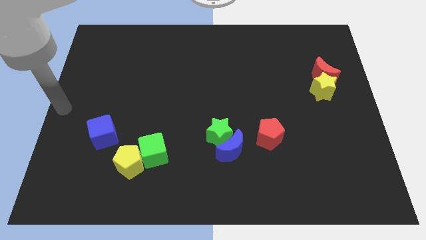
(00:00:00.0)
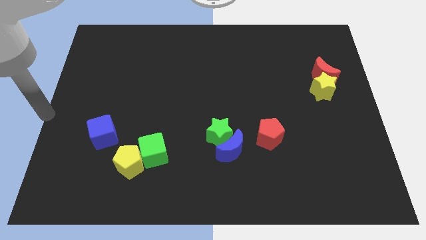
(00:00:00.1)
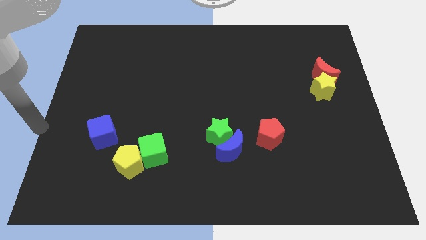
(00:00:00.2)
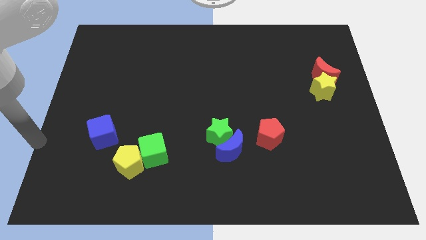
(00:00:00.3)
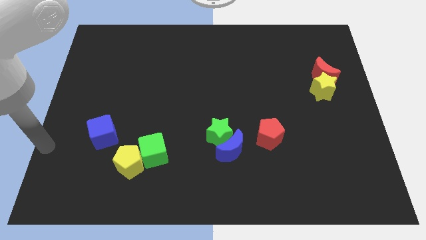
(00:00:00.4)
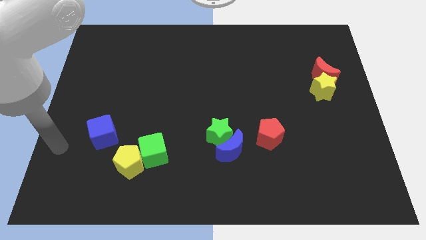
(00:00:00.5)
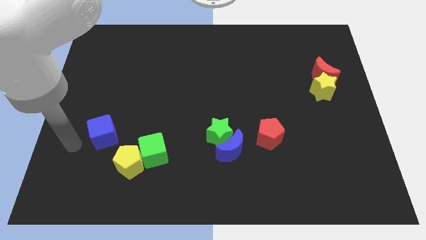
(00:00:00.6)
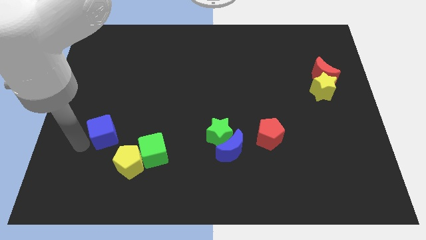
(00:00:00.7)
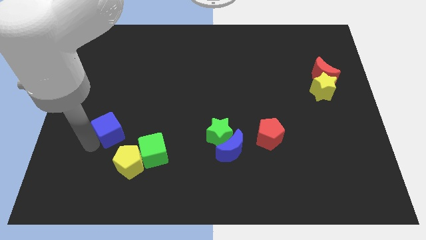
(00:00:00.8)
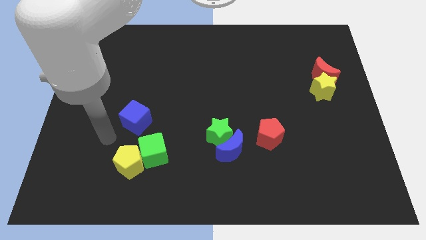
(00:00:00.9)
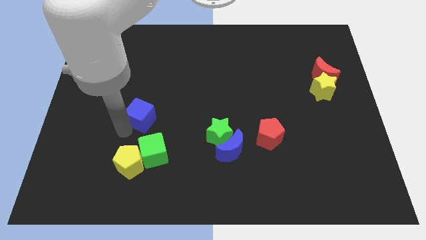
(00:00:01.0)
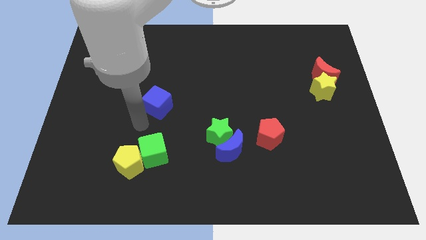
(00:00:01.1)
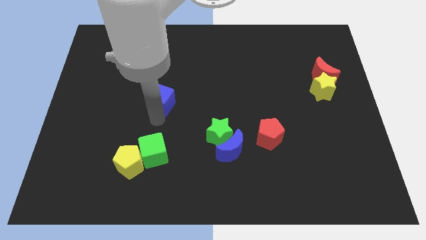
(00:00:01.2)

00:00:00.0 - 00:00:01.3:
place the blue cube above green cube

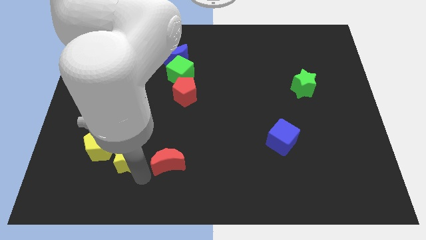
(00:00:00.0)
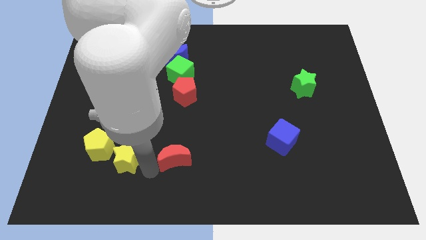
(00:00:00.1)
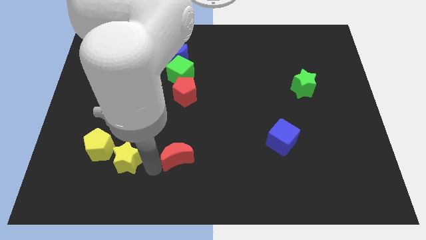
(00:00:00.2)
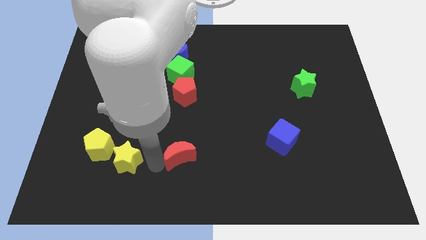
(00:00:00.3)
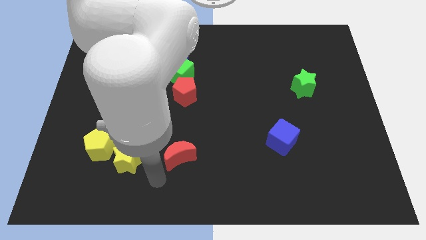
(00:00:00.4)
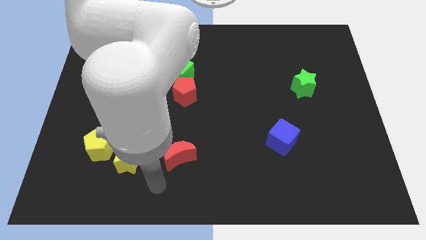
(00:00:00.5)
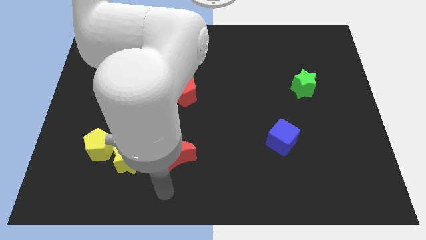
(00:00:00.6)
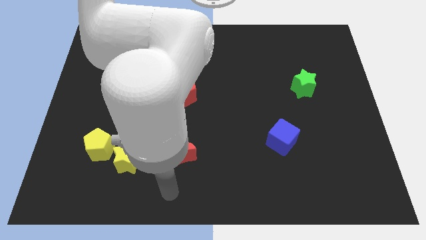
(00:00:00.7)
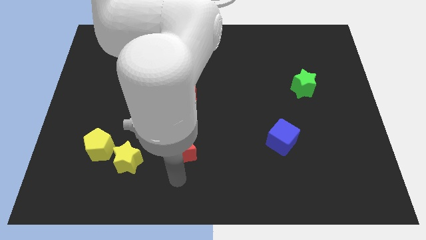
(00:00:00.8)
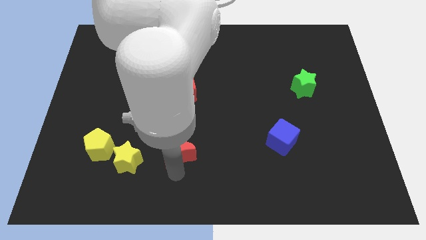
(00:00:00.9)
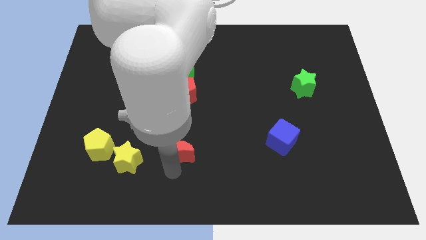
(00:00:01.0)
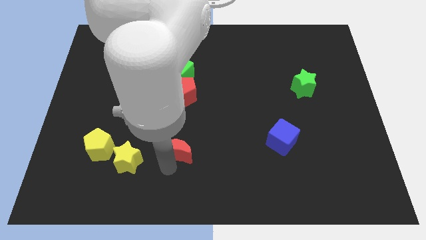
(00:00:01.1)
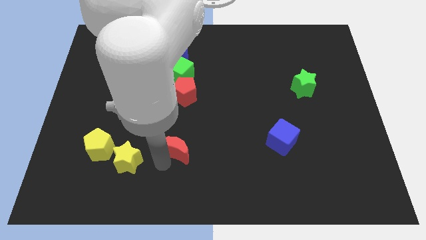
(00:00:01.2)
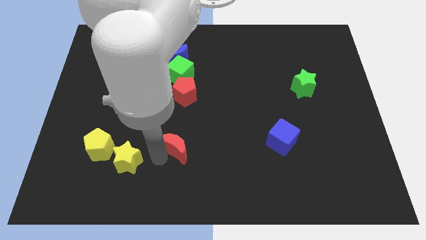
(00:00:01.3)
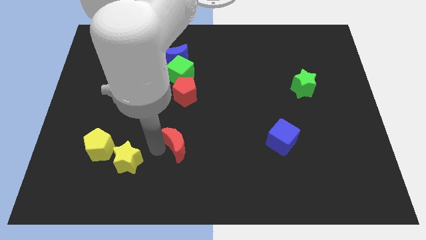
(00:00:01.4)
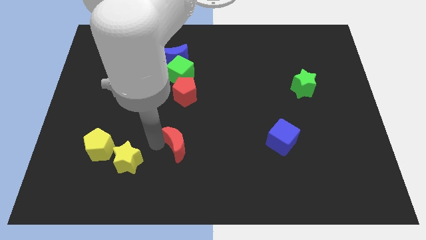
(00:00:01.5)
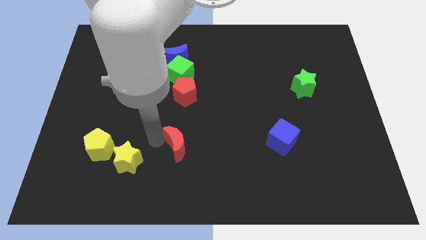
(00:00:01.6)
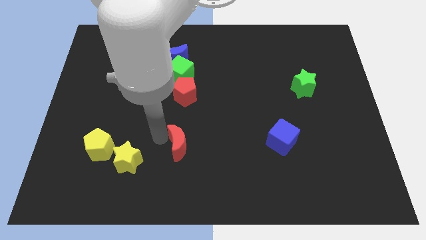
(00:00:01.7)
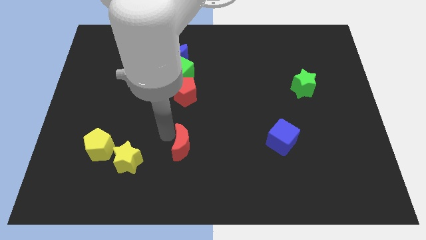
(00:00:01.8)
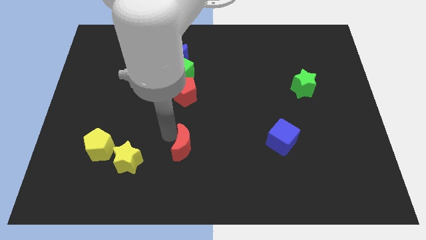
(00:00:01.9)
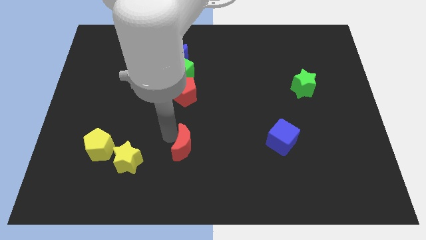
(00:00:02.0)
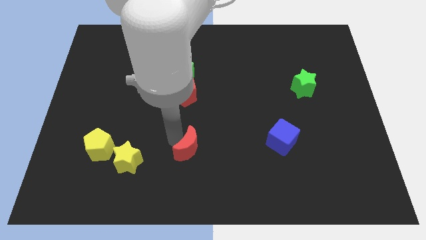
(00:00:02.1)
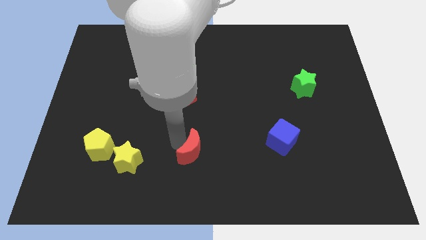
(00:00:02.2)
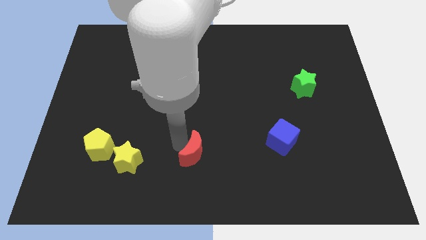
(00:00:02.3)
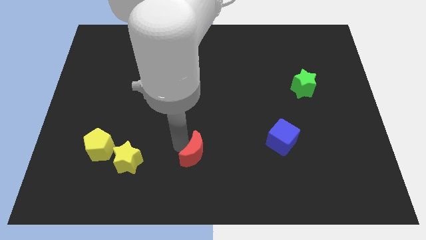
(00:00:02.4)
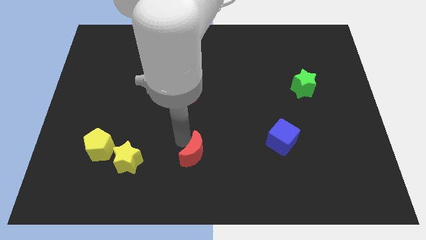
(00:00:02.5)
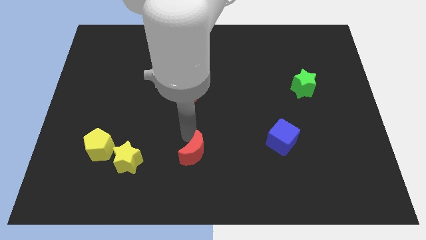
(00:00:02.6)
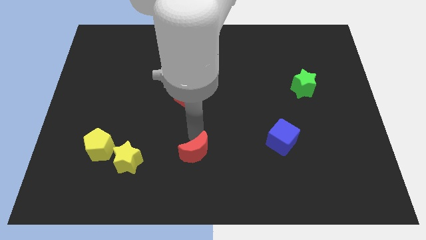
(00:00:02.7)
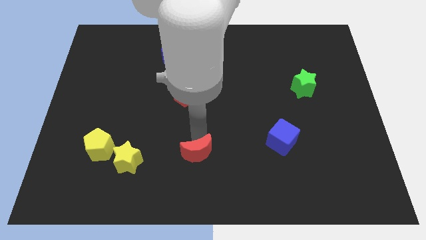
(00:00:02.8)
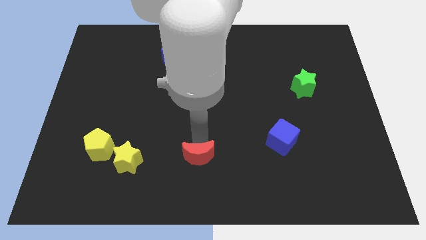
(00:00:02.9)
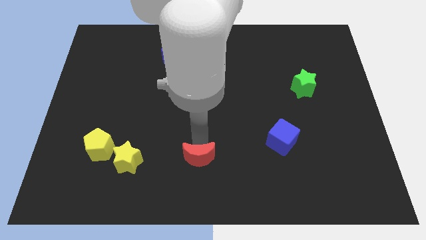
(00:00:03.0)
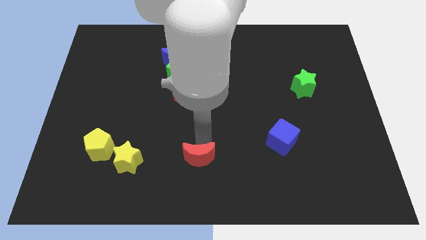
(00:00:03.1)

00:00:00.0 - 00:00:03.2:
move the red crescent towards blue cube

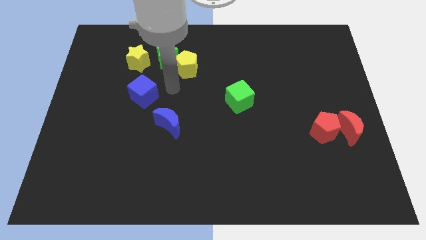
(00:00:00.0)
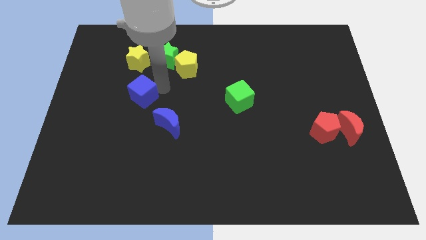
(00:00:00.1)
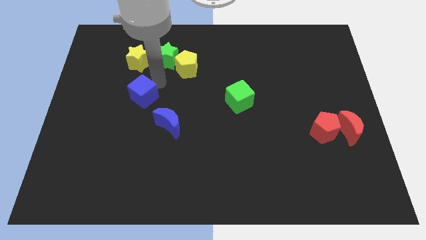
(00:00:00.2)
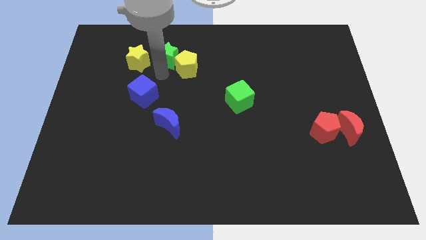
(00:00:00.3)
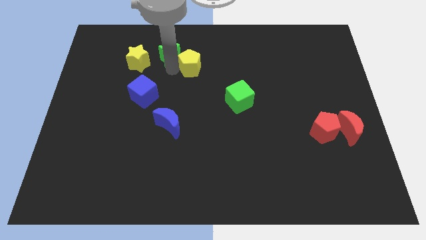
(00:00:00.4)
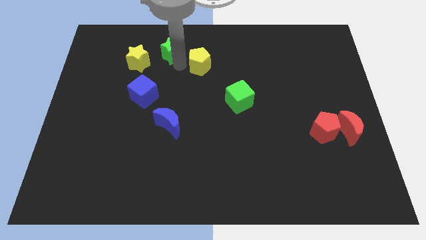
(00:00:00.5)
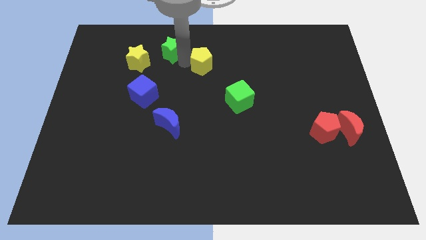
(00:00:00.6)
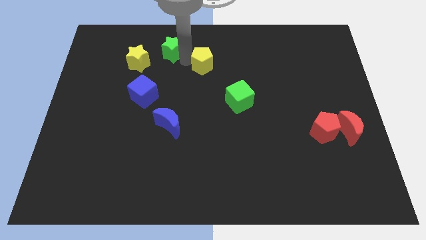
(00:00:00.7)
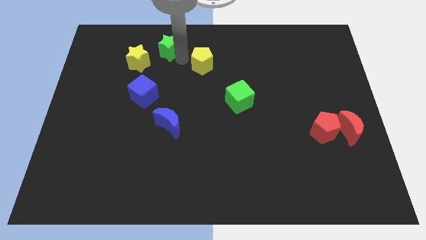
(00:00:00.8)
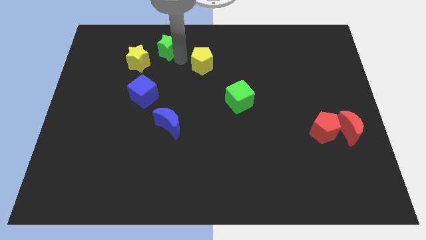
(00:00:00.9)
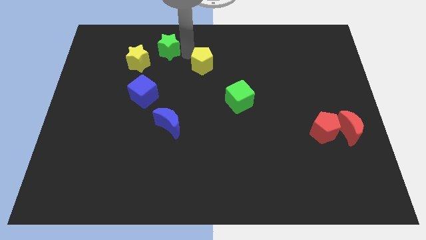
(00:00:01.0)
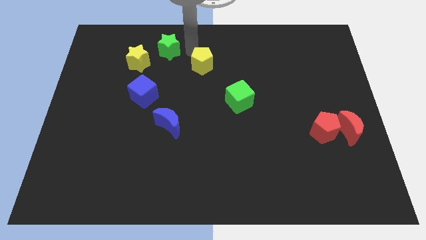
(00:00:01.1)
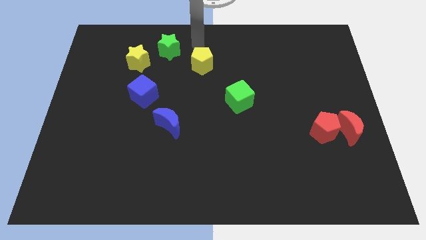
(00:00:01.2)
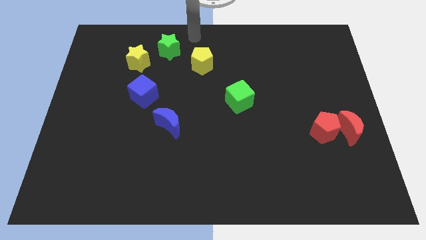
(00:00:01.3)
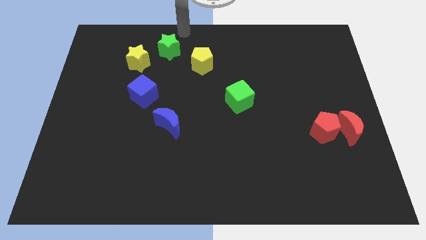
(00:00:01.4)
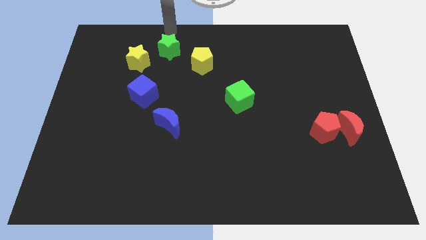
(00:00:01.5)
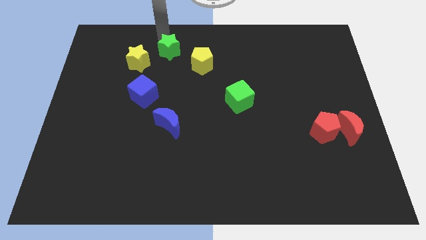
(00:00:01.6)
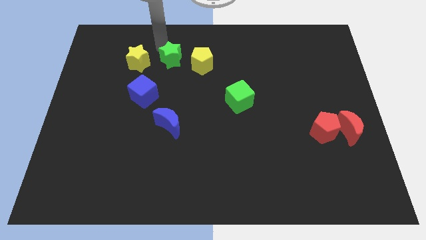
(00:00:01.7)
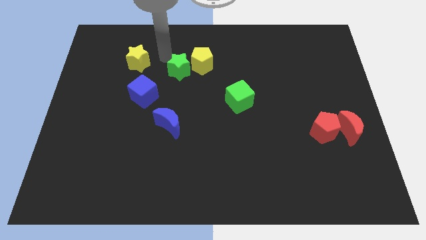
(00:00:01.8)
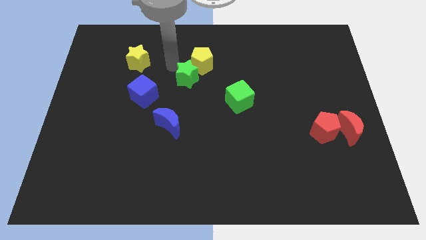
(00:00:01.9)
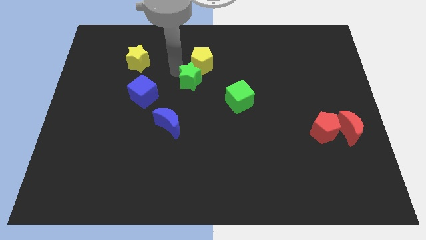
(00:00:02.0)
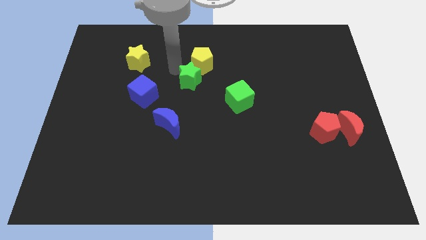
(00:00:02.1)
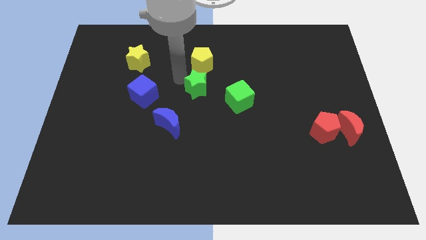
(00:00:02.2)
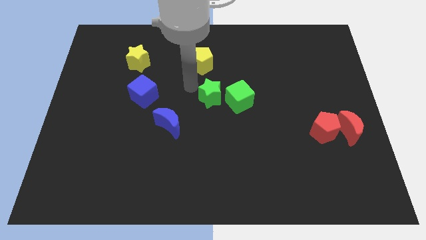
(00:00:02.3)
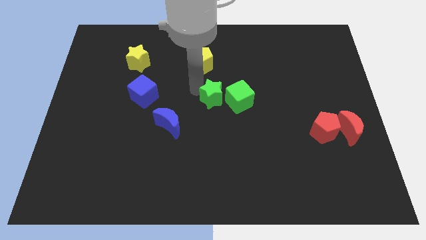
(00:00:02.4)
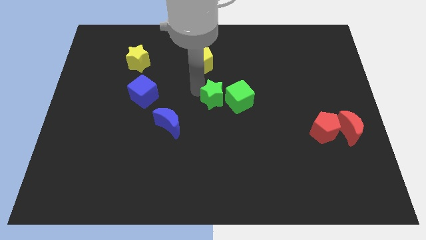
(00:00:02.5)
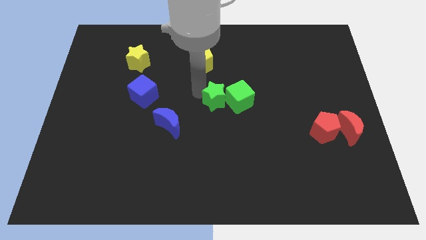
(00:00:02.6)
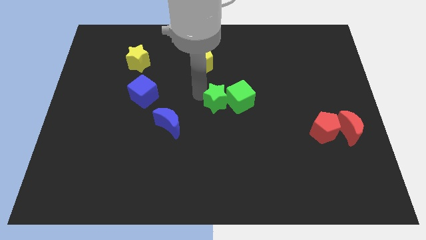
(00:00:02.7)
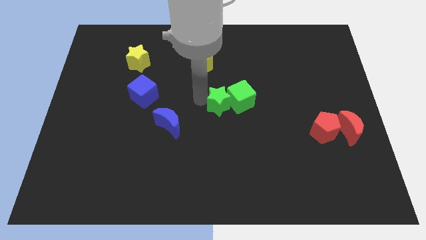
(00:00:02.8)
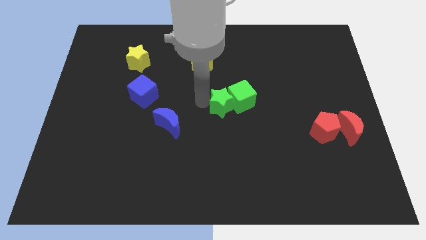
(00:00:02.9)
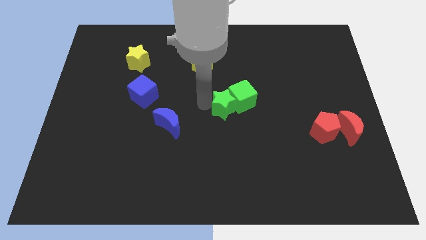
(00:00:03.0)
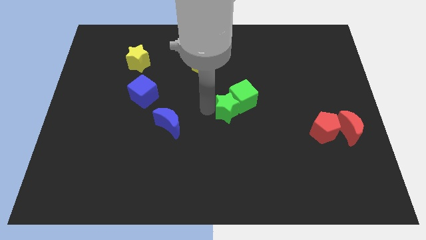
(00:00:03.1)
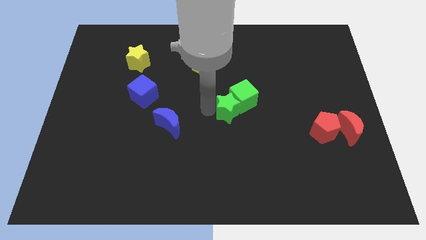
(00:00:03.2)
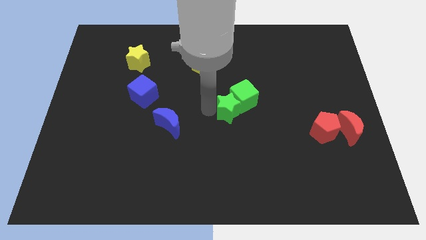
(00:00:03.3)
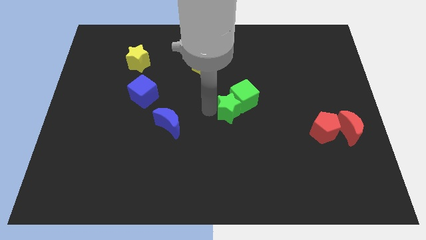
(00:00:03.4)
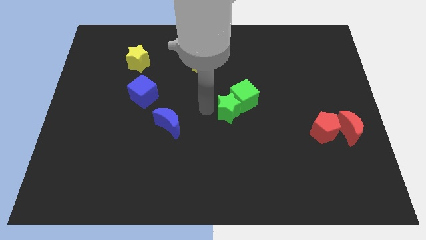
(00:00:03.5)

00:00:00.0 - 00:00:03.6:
move green star to the center of the board

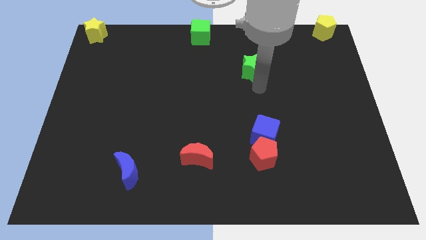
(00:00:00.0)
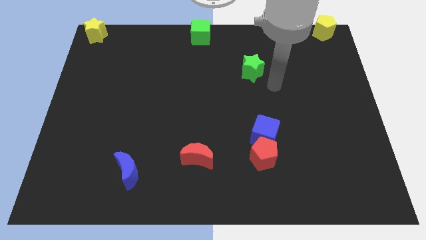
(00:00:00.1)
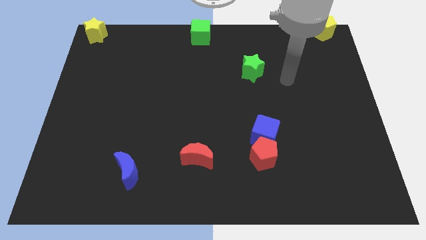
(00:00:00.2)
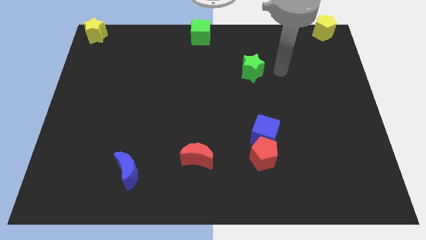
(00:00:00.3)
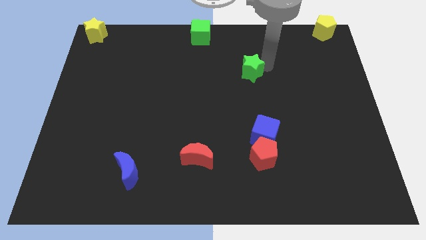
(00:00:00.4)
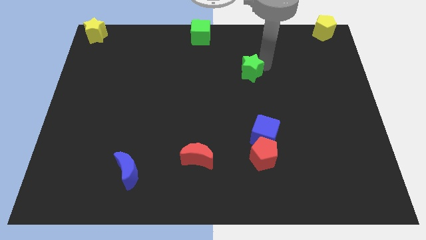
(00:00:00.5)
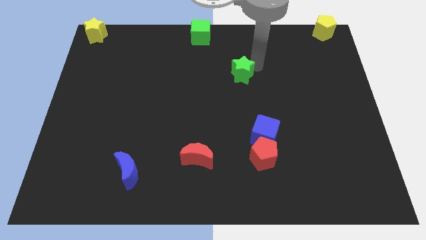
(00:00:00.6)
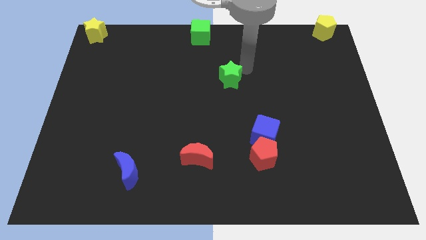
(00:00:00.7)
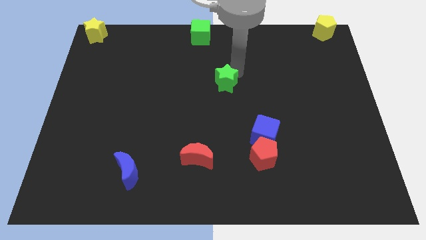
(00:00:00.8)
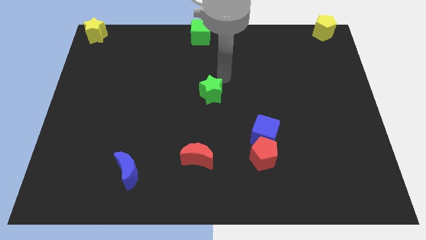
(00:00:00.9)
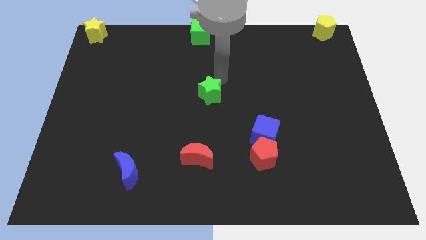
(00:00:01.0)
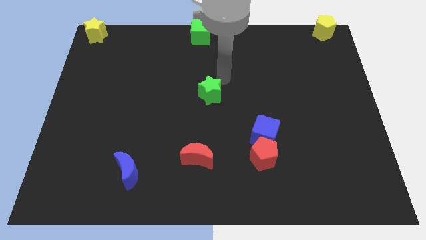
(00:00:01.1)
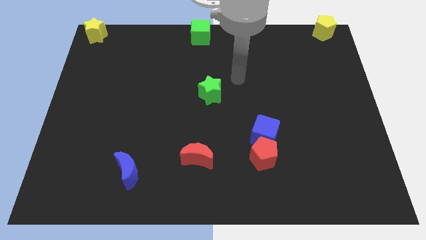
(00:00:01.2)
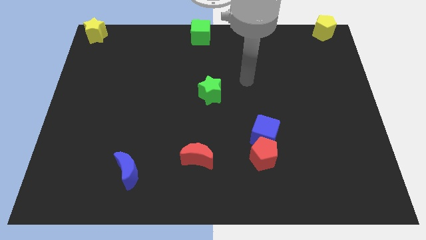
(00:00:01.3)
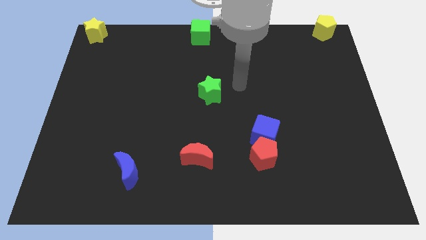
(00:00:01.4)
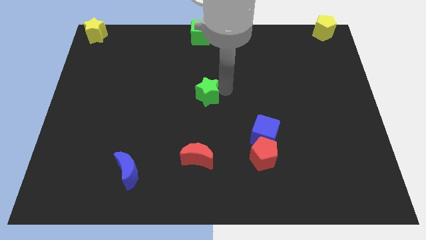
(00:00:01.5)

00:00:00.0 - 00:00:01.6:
place the green star in between green cube and red moon
